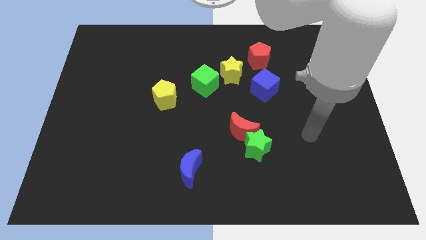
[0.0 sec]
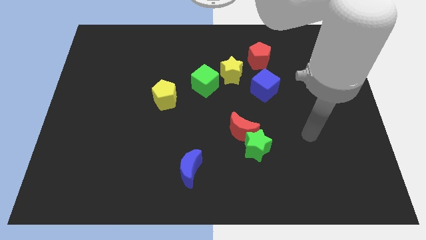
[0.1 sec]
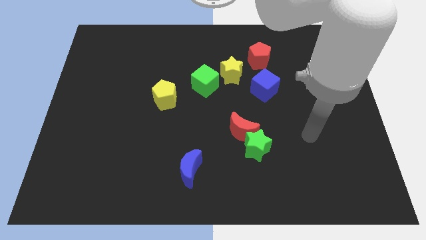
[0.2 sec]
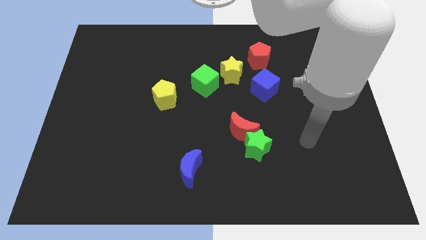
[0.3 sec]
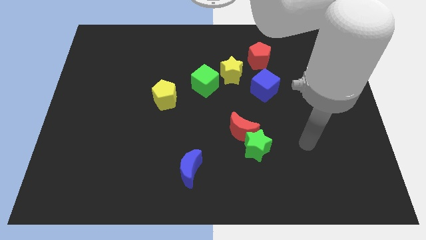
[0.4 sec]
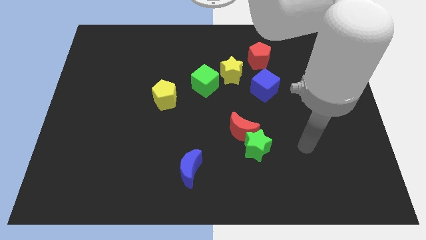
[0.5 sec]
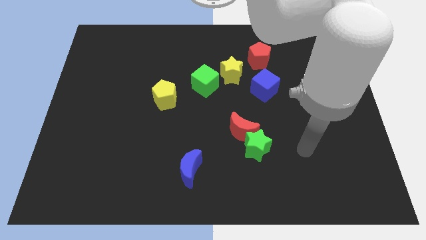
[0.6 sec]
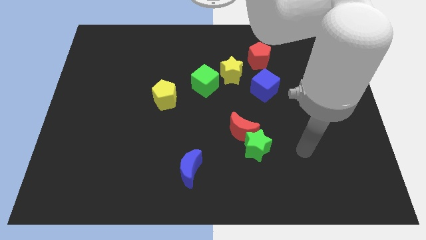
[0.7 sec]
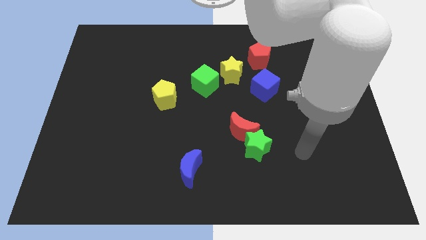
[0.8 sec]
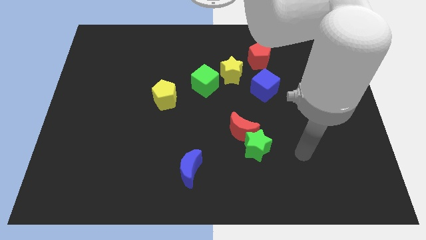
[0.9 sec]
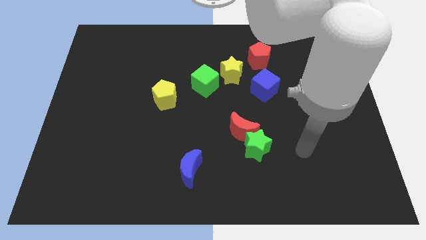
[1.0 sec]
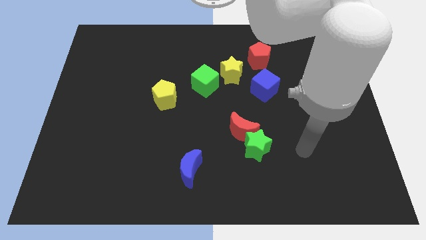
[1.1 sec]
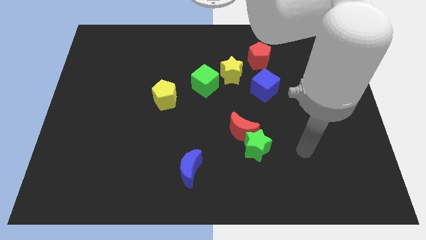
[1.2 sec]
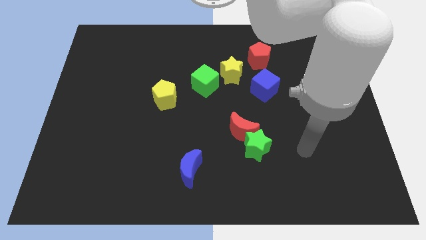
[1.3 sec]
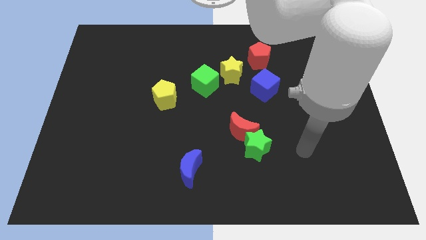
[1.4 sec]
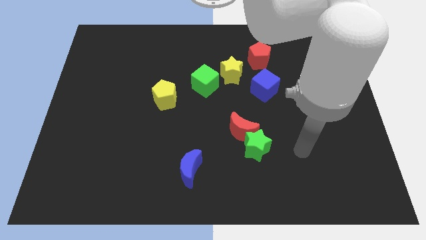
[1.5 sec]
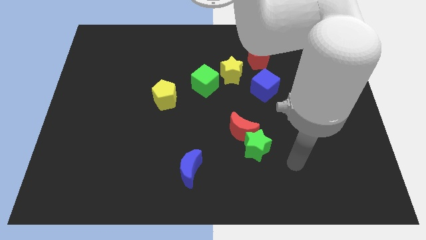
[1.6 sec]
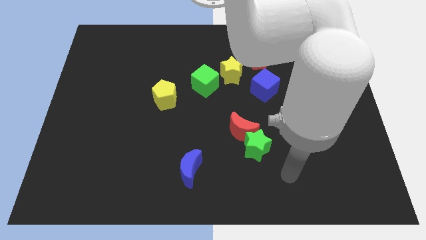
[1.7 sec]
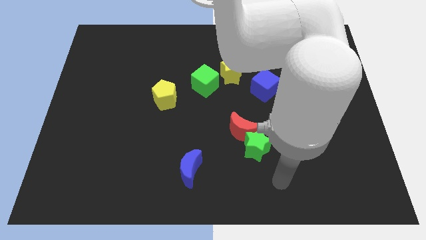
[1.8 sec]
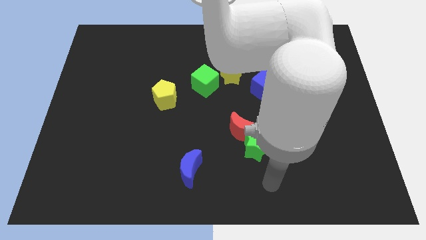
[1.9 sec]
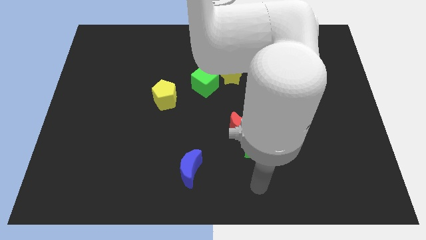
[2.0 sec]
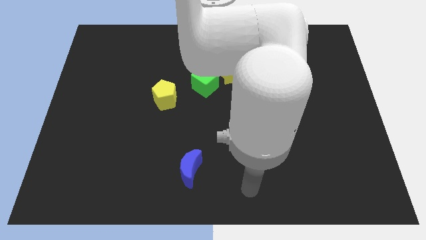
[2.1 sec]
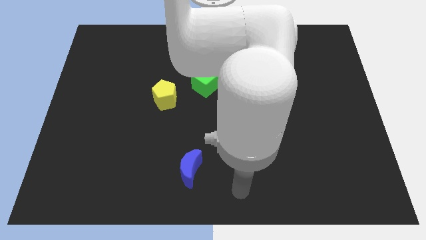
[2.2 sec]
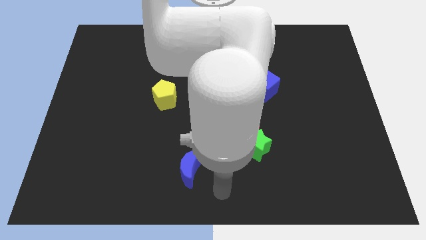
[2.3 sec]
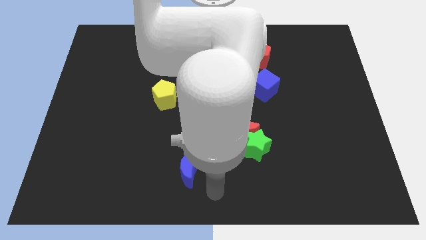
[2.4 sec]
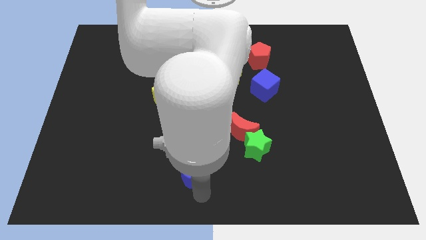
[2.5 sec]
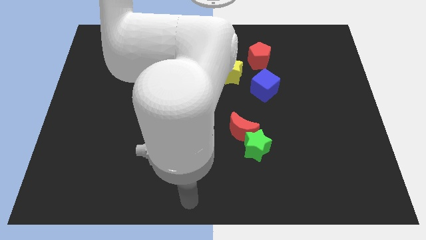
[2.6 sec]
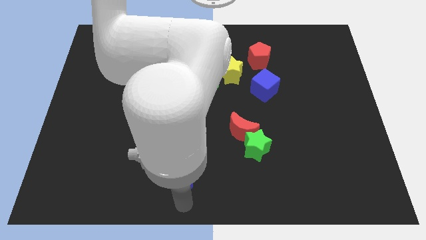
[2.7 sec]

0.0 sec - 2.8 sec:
point your hand below the blue moon

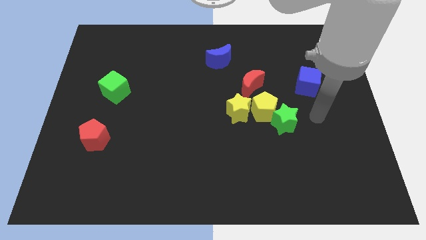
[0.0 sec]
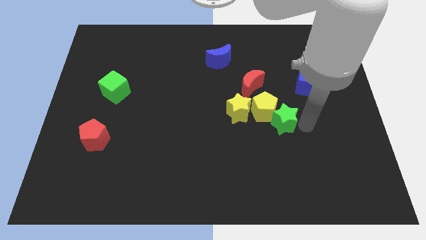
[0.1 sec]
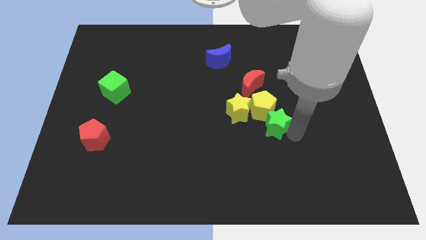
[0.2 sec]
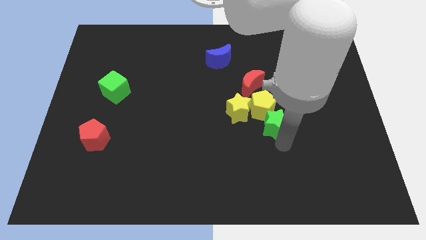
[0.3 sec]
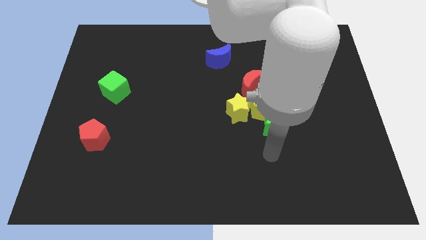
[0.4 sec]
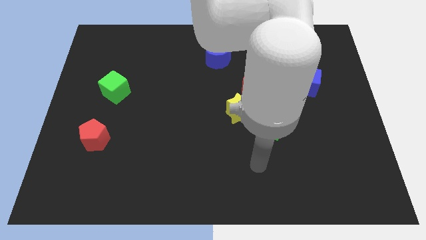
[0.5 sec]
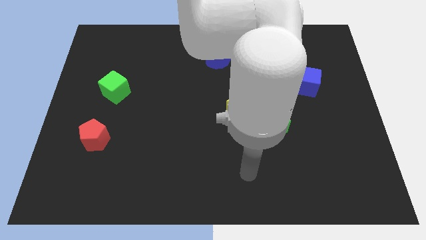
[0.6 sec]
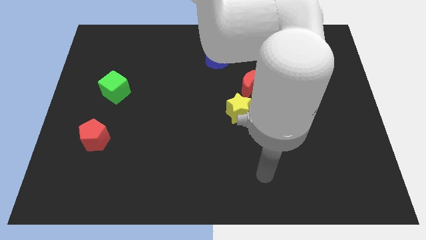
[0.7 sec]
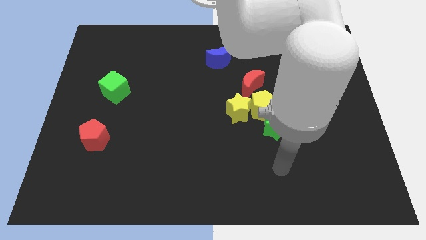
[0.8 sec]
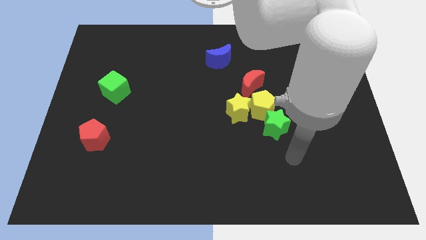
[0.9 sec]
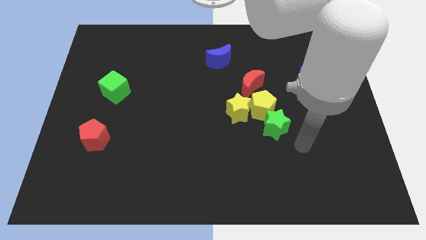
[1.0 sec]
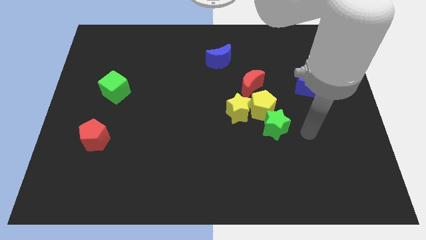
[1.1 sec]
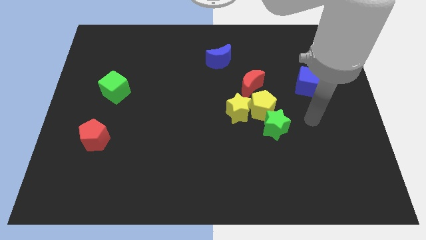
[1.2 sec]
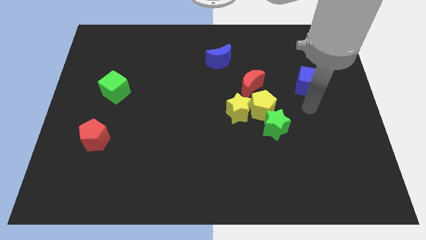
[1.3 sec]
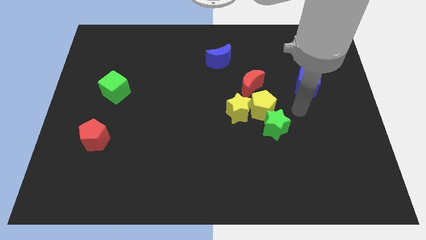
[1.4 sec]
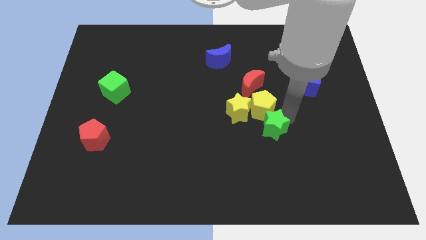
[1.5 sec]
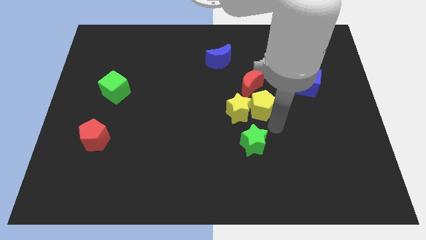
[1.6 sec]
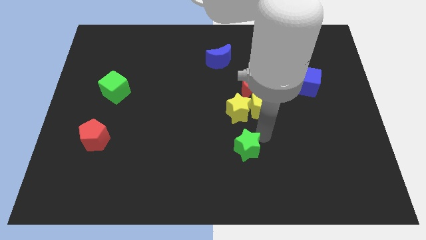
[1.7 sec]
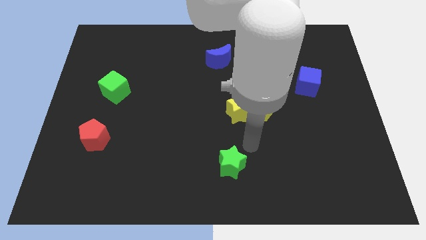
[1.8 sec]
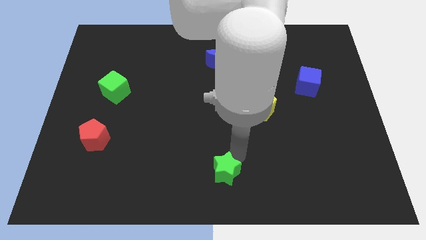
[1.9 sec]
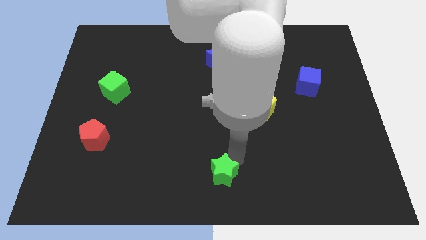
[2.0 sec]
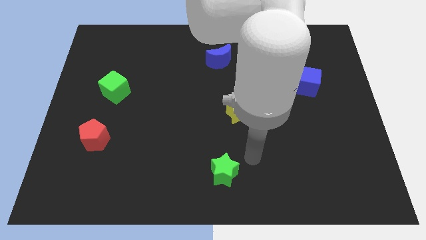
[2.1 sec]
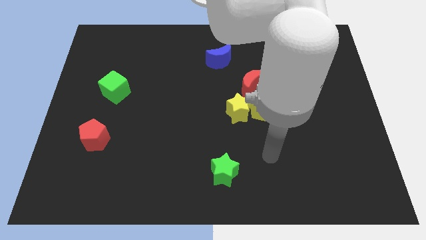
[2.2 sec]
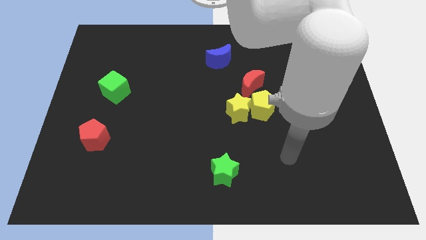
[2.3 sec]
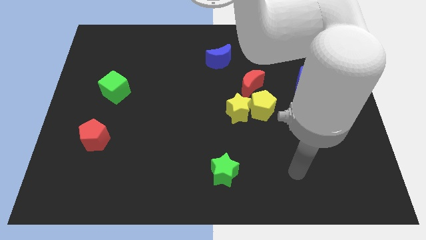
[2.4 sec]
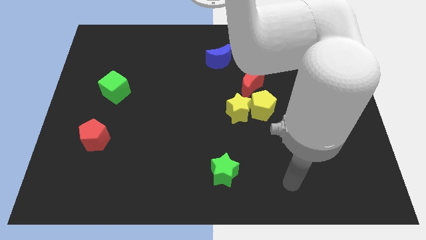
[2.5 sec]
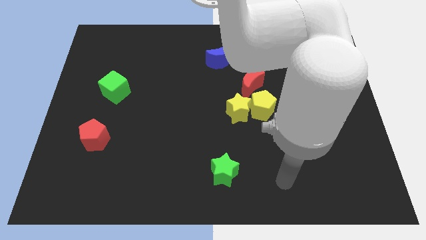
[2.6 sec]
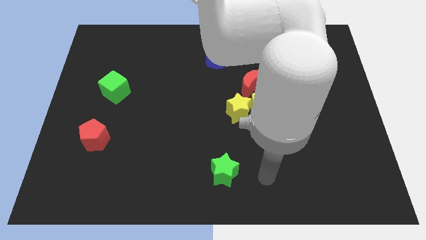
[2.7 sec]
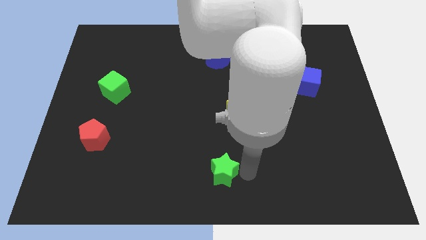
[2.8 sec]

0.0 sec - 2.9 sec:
place the green star to the bottom center

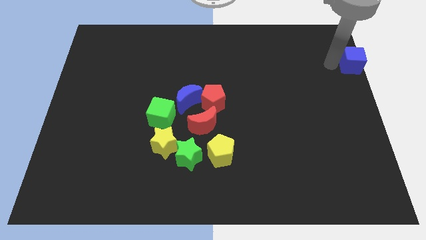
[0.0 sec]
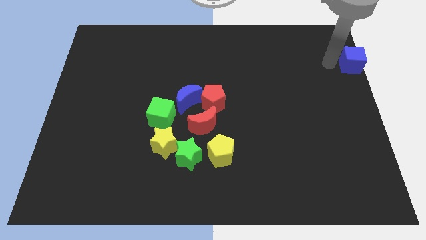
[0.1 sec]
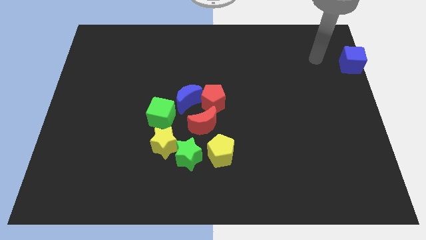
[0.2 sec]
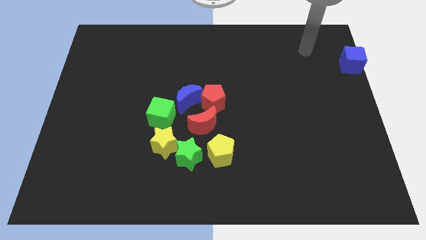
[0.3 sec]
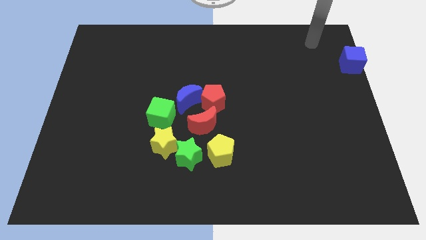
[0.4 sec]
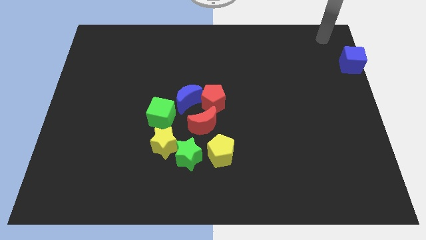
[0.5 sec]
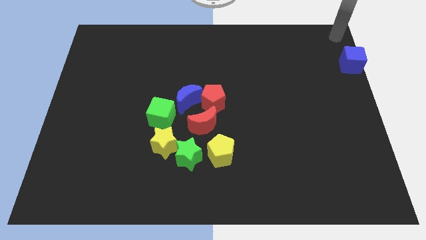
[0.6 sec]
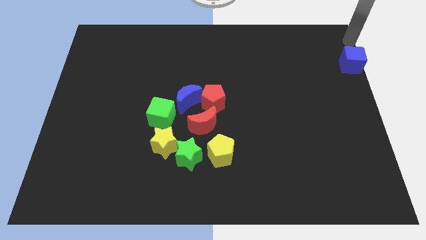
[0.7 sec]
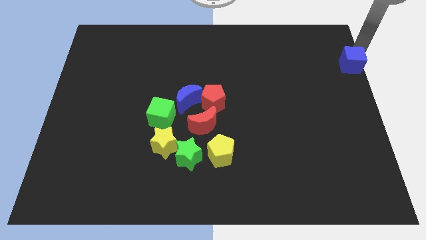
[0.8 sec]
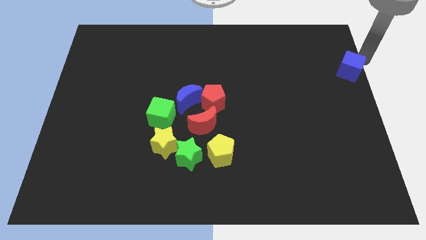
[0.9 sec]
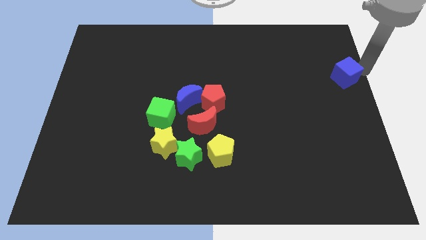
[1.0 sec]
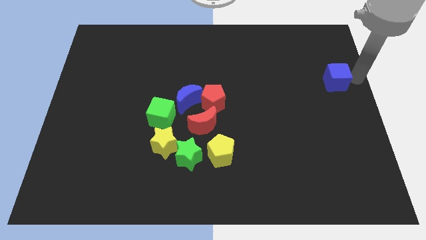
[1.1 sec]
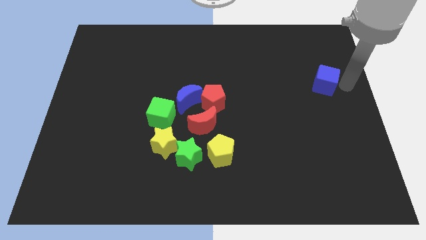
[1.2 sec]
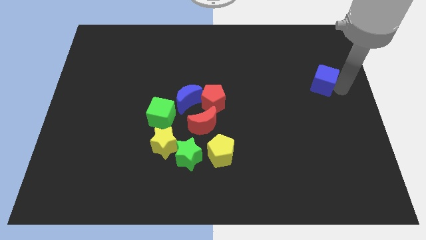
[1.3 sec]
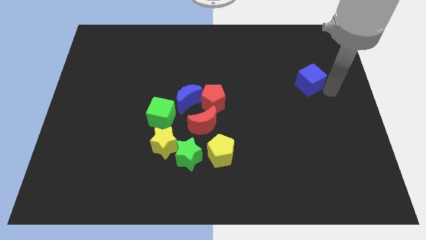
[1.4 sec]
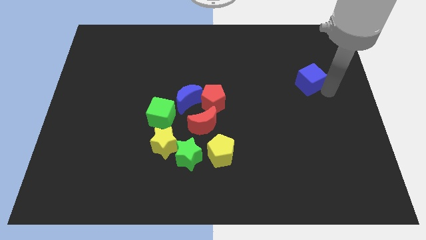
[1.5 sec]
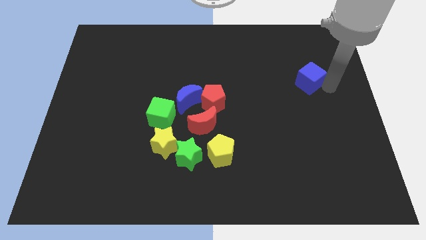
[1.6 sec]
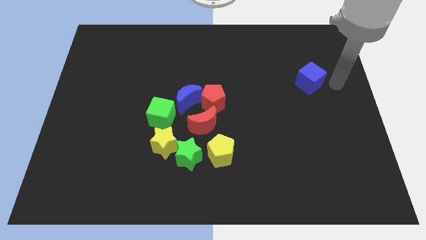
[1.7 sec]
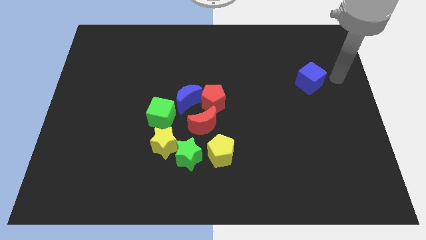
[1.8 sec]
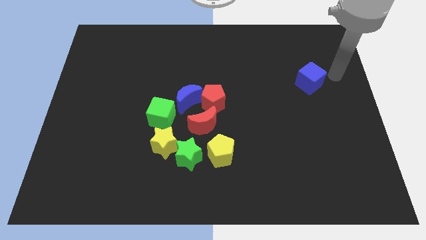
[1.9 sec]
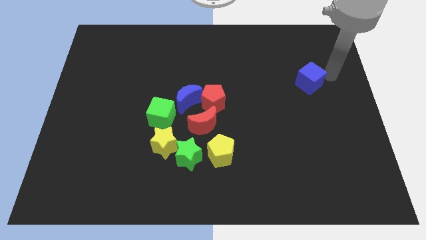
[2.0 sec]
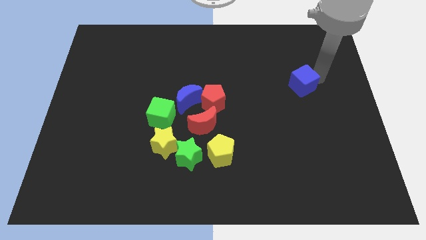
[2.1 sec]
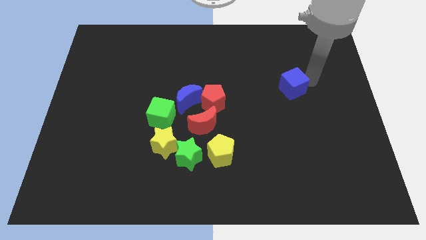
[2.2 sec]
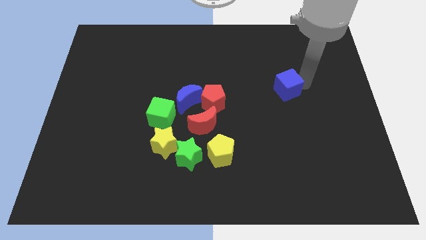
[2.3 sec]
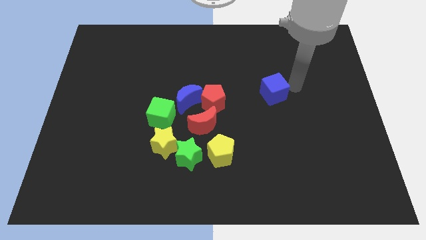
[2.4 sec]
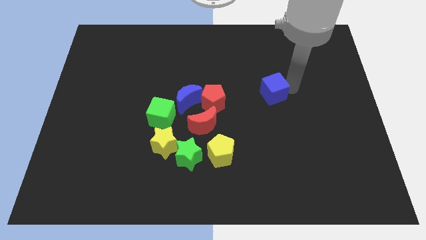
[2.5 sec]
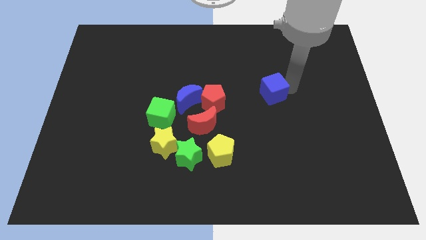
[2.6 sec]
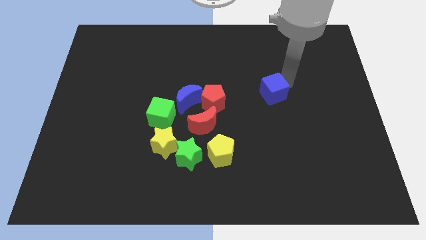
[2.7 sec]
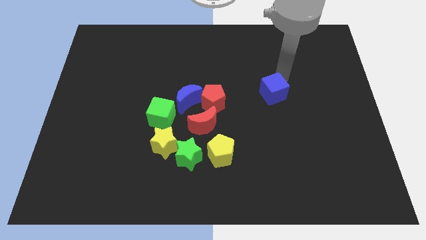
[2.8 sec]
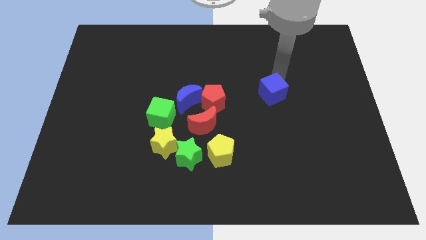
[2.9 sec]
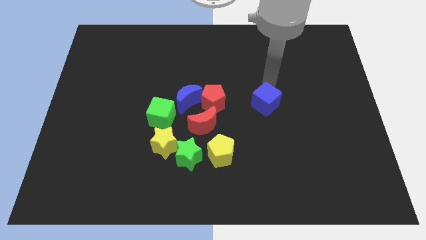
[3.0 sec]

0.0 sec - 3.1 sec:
move the blue cube horizontal to the red pentagon
